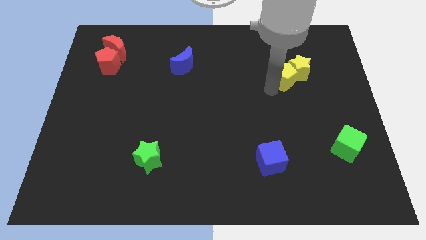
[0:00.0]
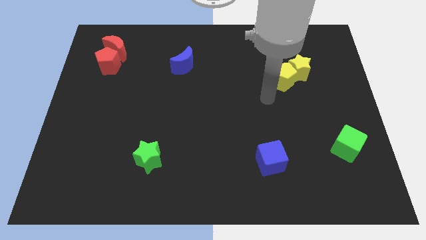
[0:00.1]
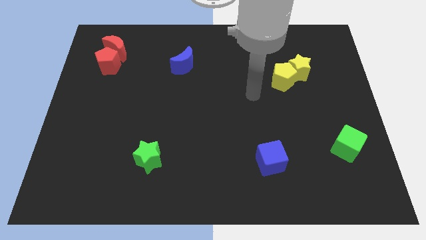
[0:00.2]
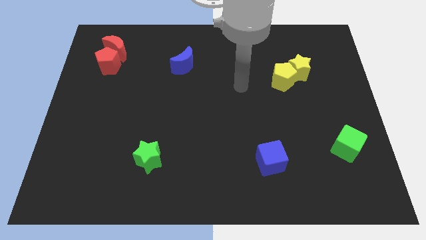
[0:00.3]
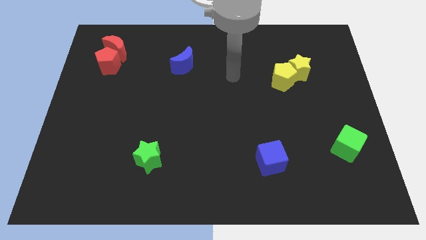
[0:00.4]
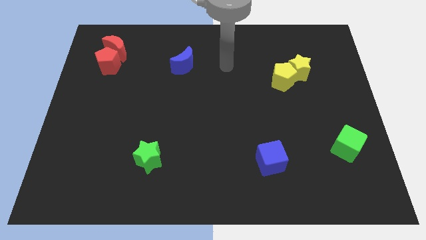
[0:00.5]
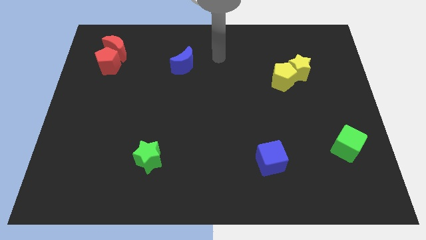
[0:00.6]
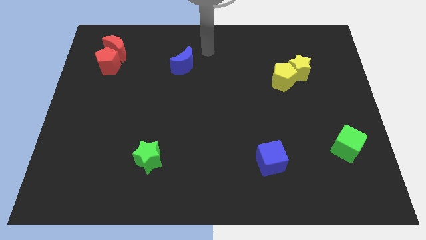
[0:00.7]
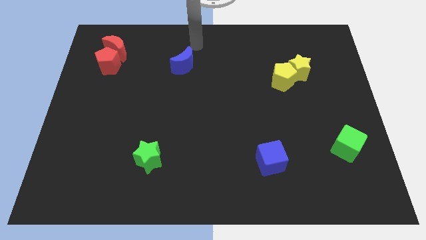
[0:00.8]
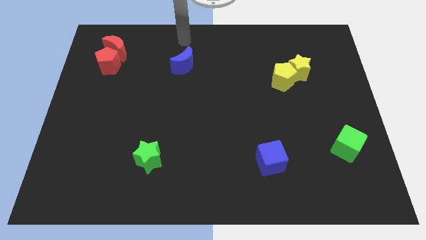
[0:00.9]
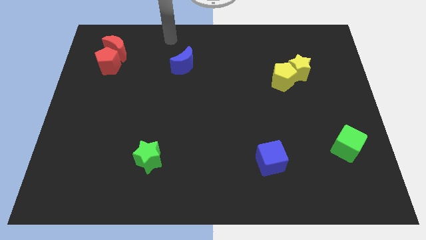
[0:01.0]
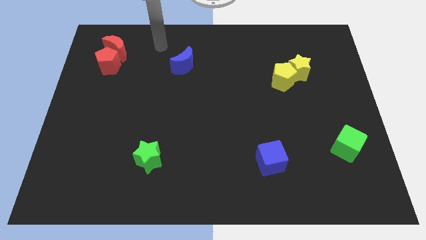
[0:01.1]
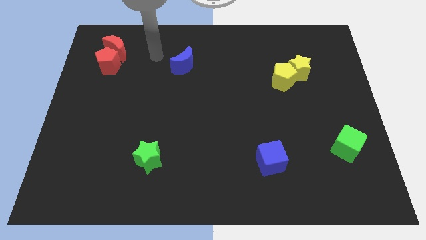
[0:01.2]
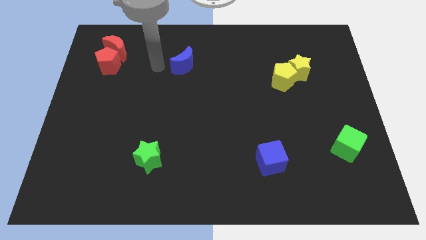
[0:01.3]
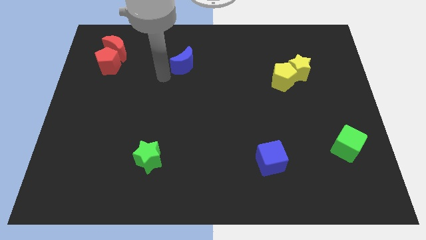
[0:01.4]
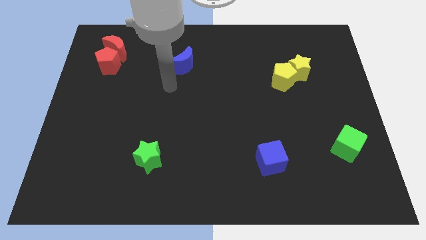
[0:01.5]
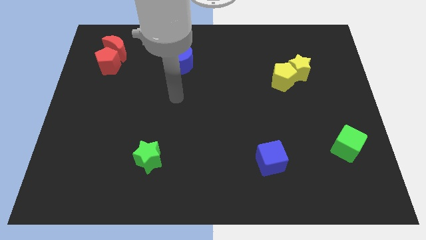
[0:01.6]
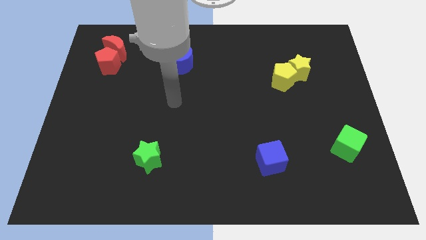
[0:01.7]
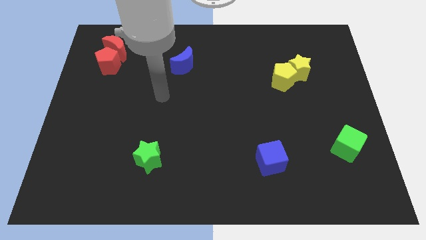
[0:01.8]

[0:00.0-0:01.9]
put your arm away from the yellow pentagon

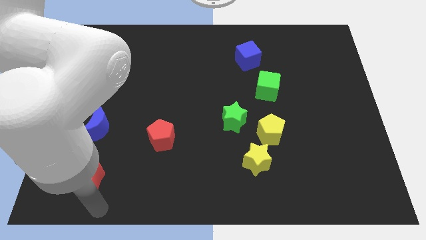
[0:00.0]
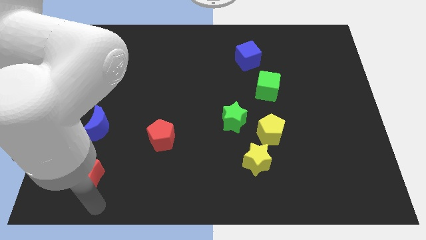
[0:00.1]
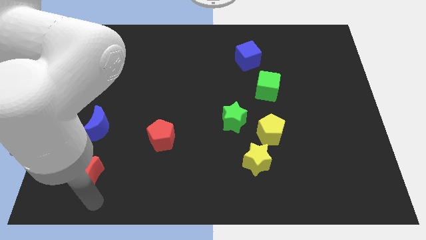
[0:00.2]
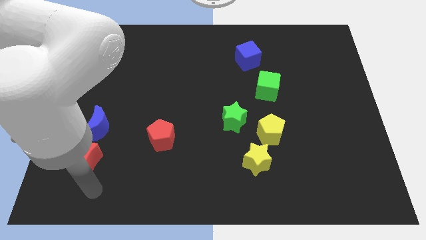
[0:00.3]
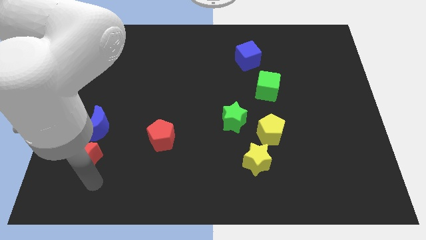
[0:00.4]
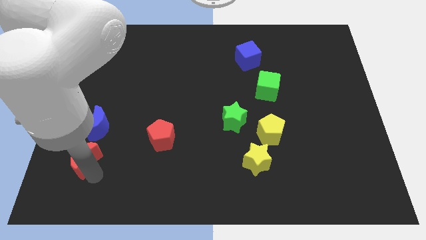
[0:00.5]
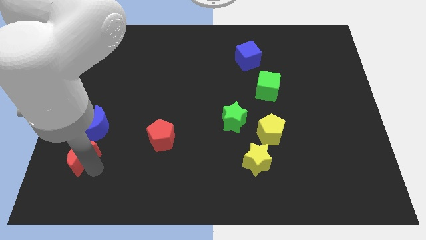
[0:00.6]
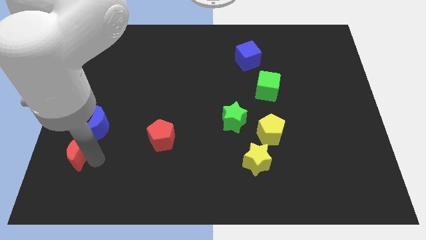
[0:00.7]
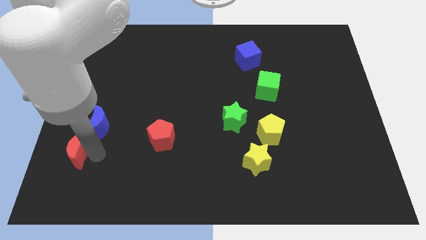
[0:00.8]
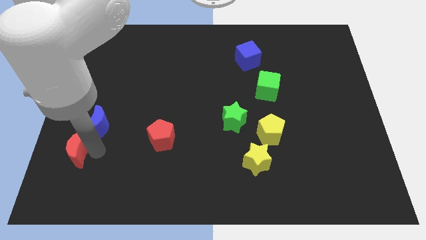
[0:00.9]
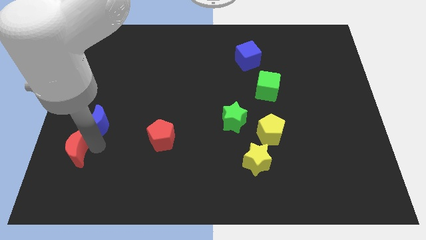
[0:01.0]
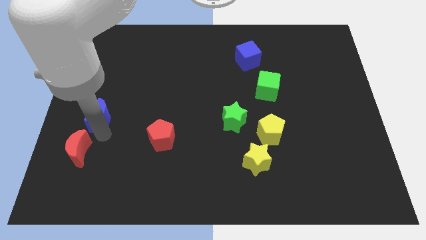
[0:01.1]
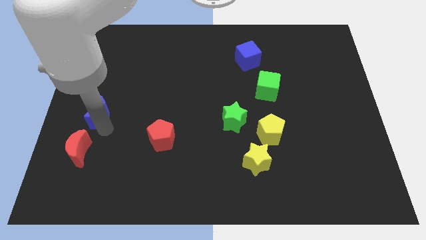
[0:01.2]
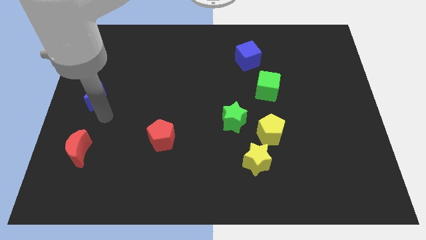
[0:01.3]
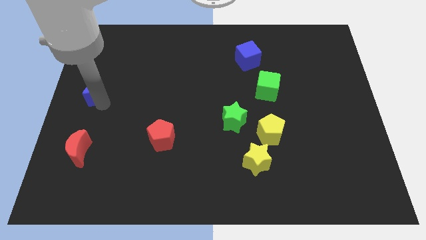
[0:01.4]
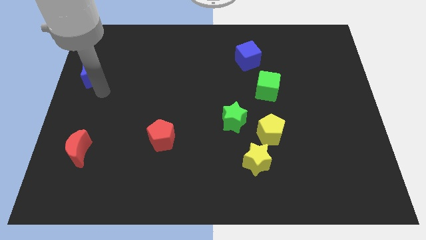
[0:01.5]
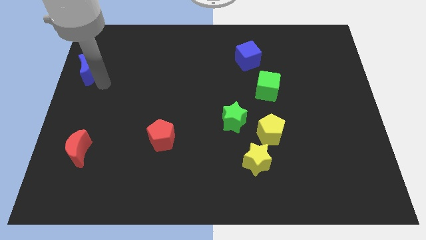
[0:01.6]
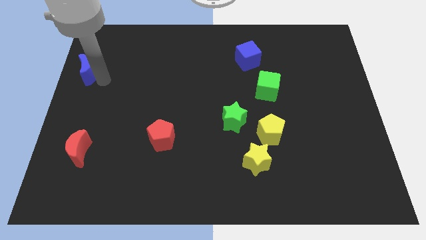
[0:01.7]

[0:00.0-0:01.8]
drag the blue moon to the top

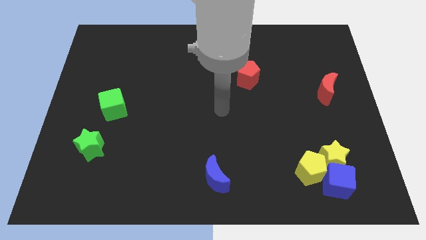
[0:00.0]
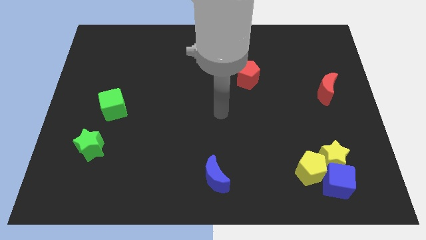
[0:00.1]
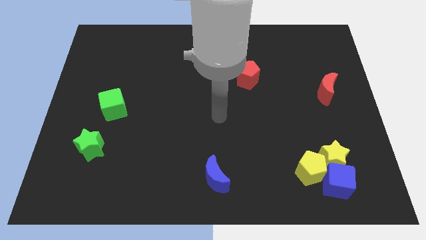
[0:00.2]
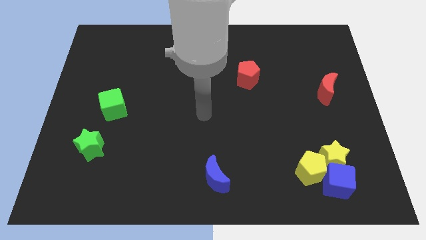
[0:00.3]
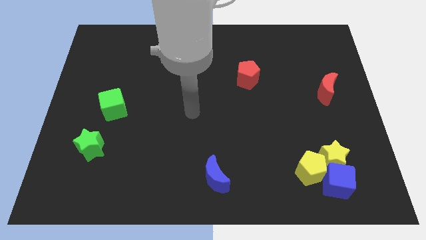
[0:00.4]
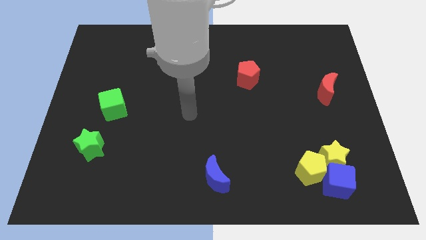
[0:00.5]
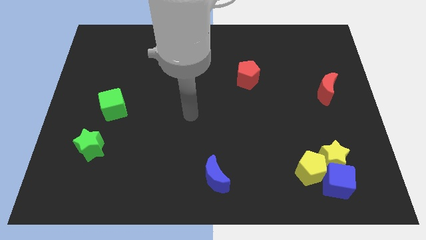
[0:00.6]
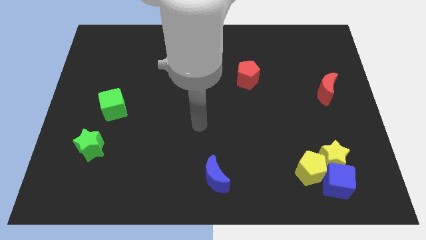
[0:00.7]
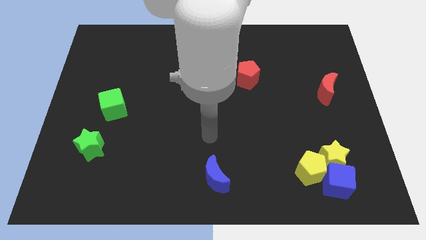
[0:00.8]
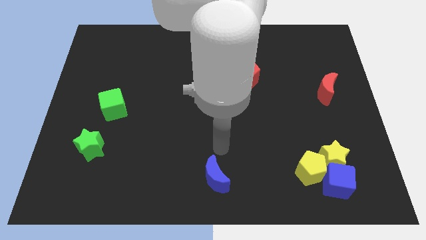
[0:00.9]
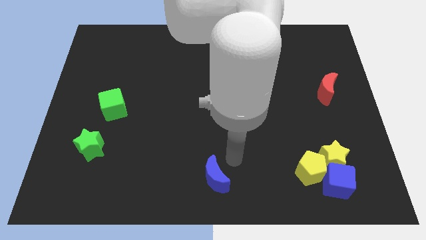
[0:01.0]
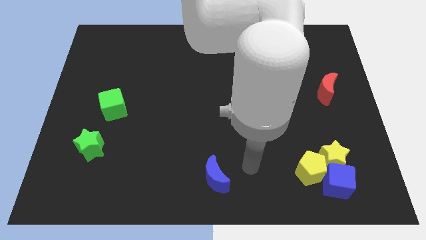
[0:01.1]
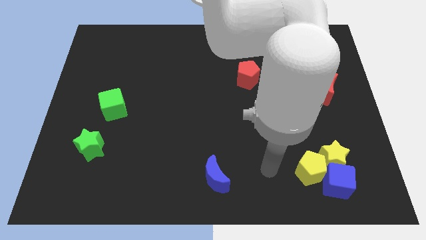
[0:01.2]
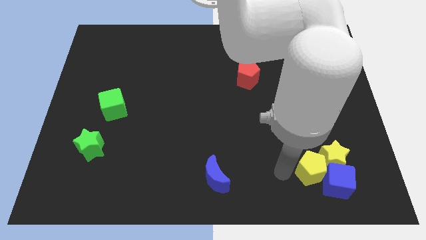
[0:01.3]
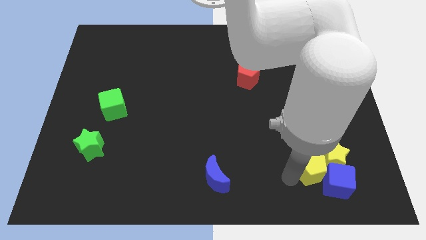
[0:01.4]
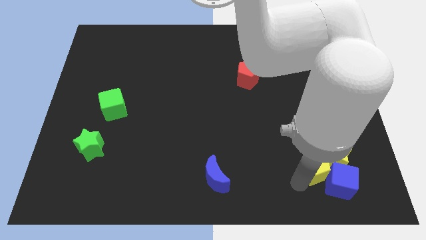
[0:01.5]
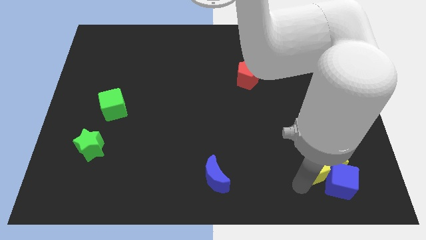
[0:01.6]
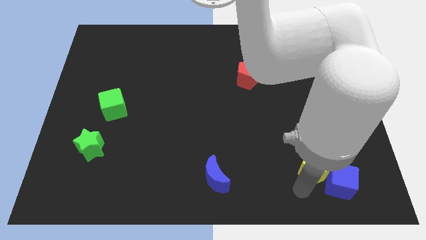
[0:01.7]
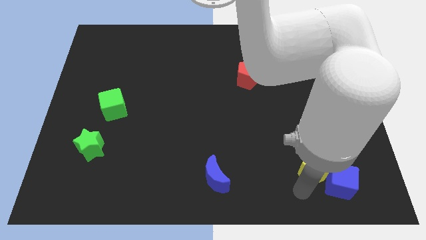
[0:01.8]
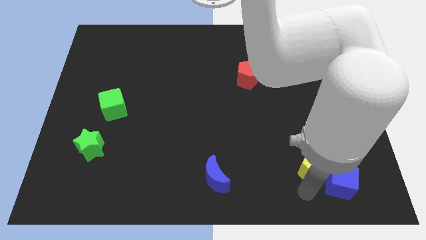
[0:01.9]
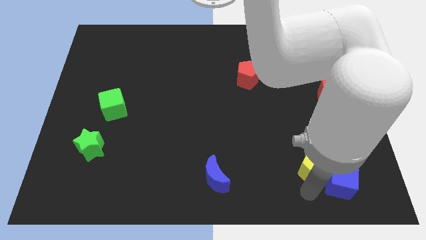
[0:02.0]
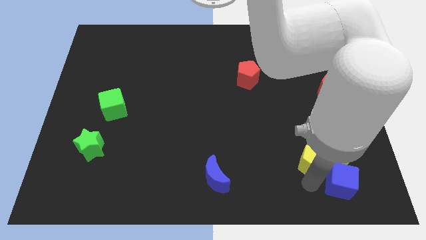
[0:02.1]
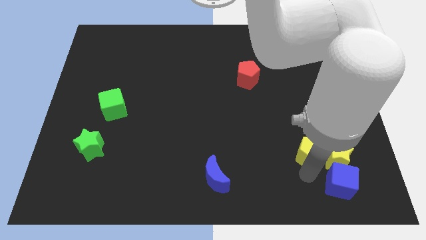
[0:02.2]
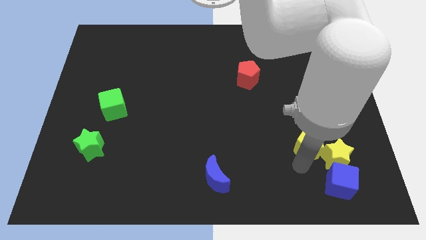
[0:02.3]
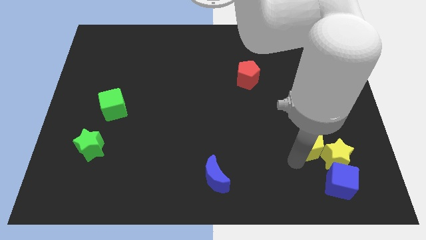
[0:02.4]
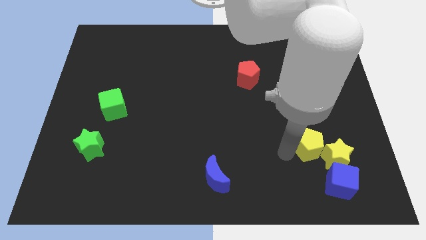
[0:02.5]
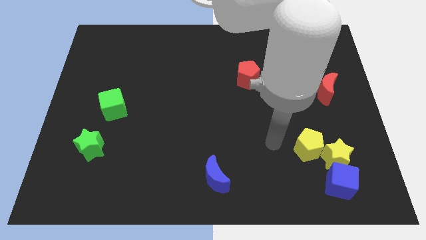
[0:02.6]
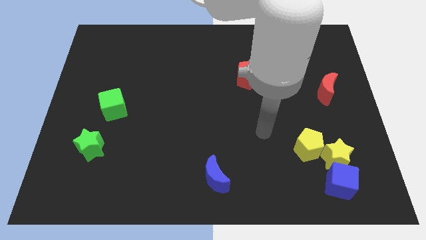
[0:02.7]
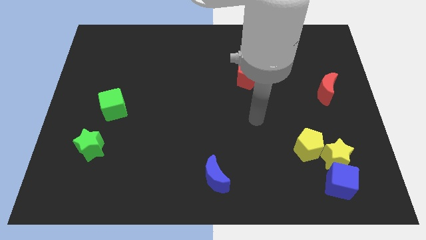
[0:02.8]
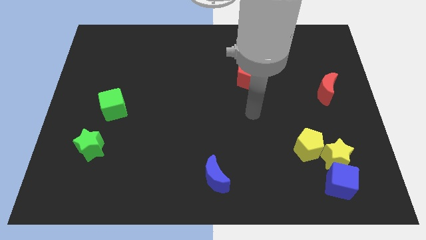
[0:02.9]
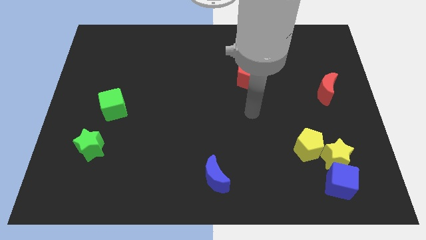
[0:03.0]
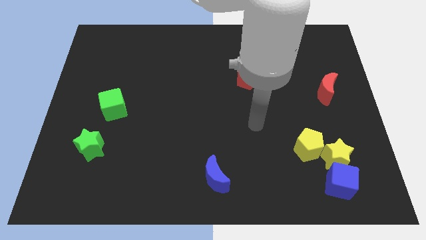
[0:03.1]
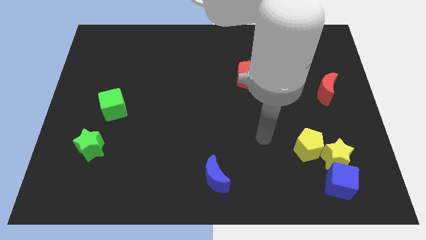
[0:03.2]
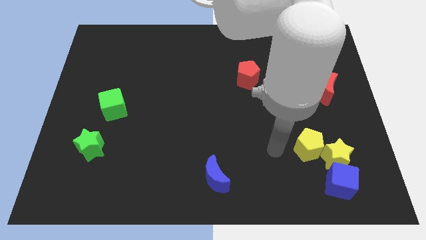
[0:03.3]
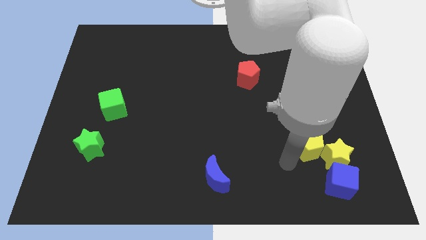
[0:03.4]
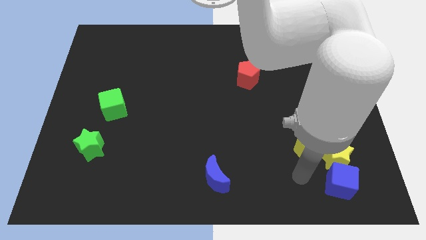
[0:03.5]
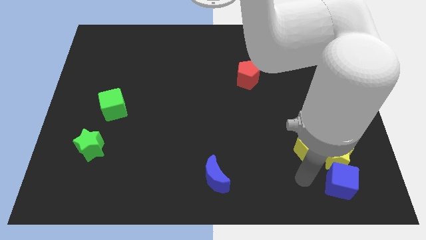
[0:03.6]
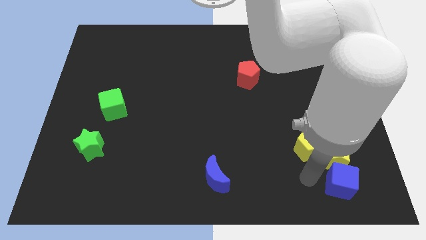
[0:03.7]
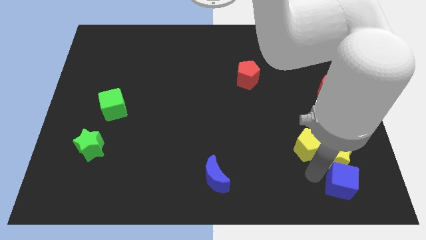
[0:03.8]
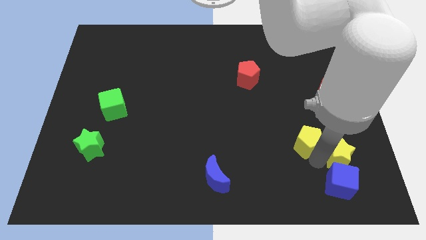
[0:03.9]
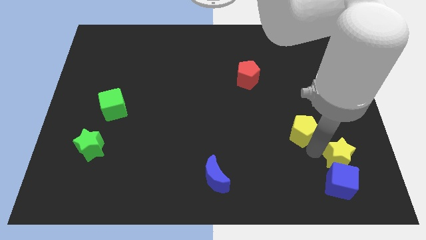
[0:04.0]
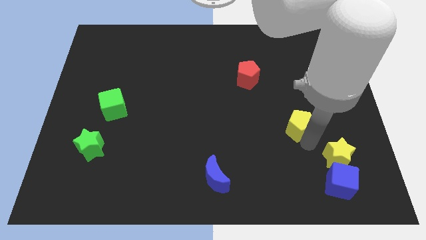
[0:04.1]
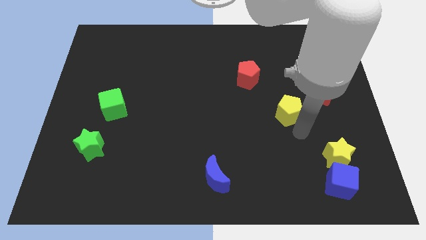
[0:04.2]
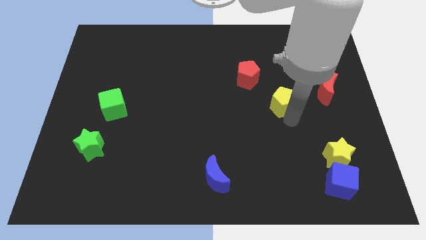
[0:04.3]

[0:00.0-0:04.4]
separate yellow pentagon from yellow star

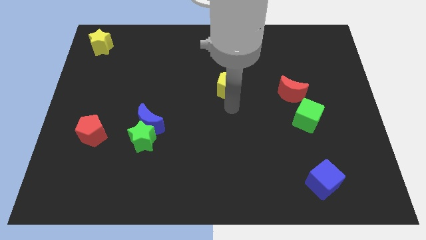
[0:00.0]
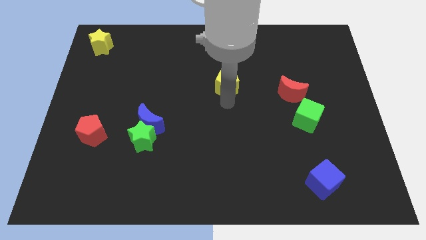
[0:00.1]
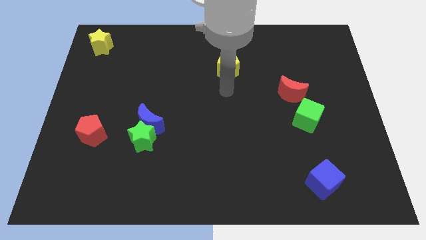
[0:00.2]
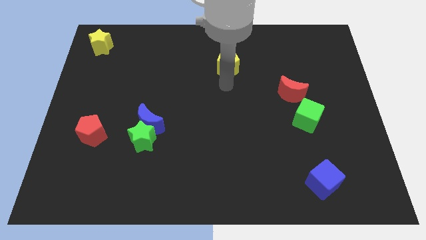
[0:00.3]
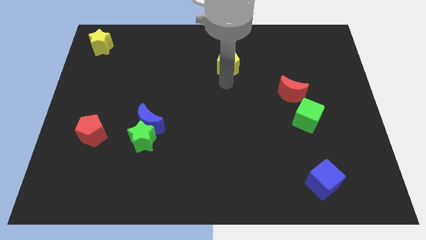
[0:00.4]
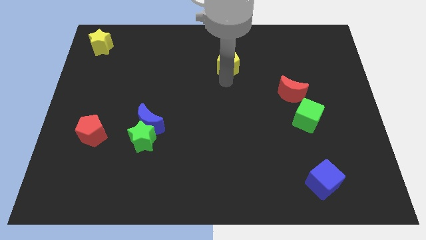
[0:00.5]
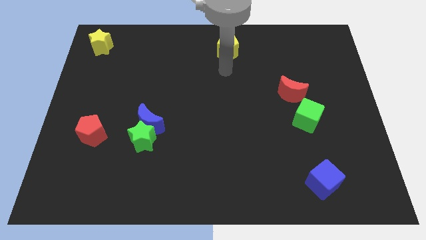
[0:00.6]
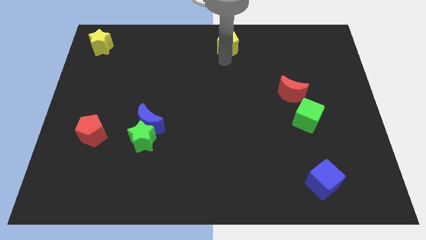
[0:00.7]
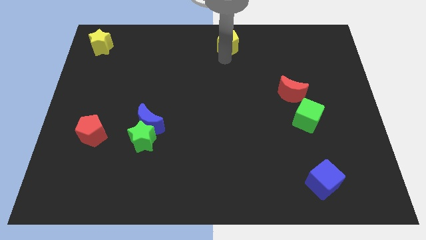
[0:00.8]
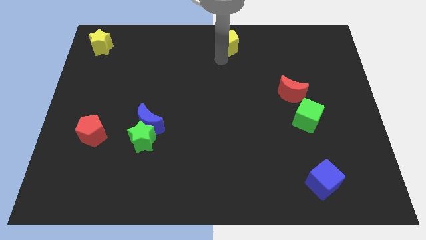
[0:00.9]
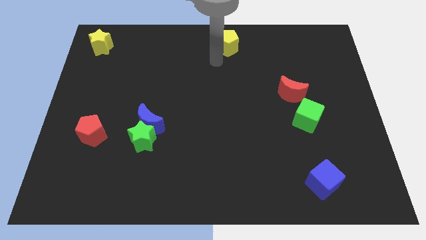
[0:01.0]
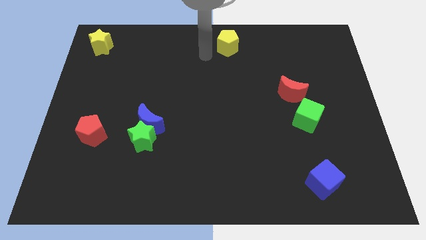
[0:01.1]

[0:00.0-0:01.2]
move the yellow pentagon towards the top center of the board
